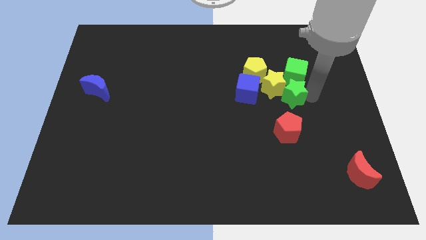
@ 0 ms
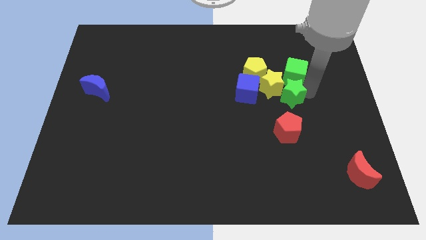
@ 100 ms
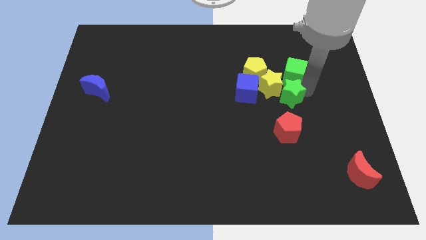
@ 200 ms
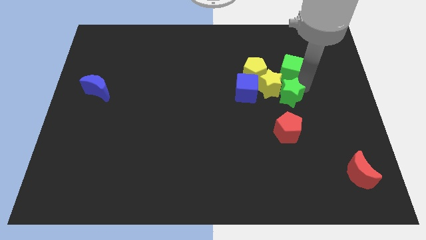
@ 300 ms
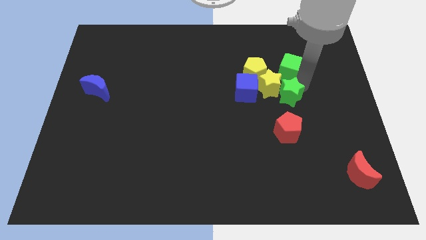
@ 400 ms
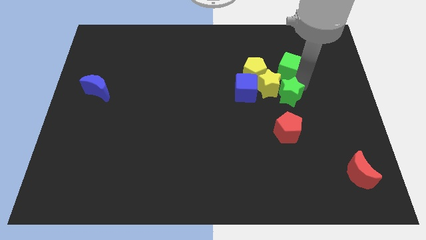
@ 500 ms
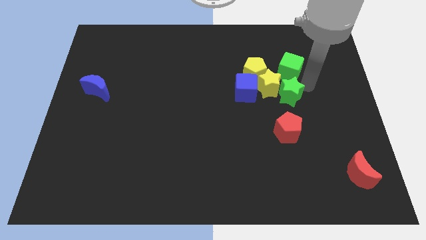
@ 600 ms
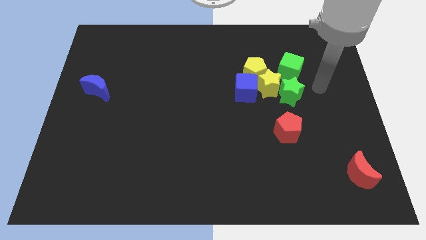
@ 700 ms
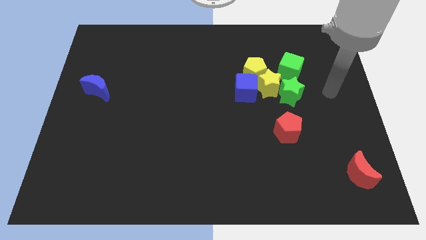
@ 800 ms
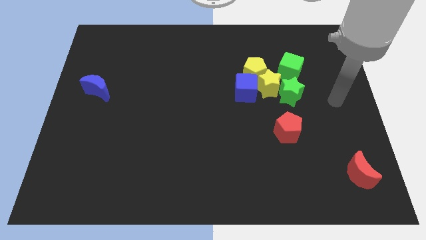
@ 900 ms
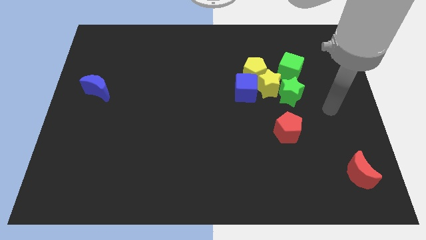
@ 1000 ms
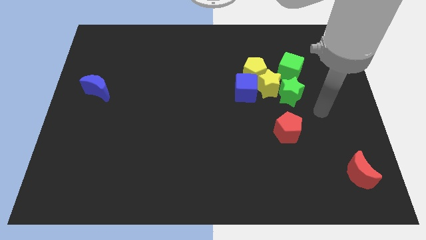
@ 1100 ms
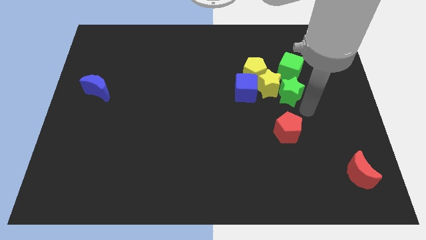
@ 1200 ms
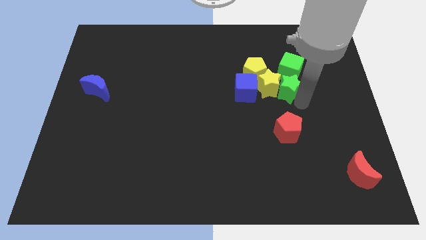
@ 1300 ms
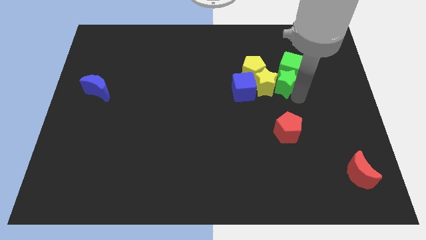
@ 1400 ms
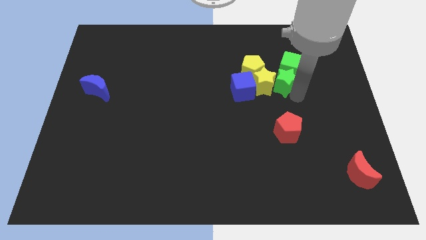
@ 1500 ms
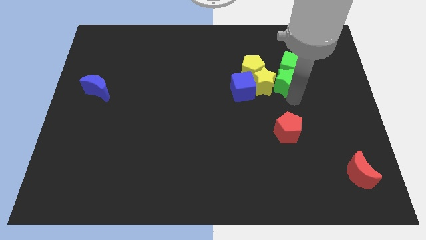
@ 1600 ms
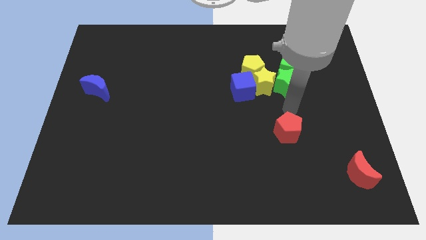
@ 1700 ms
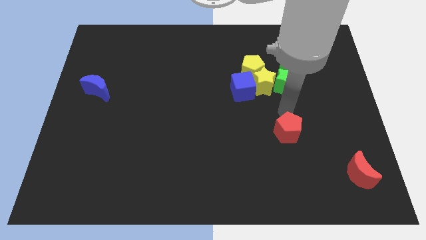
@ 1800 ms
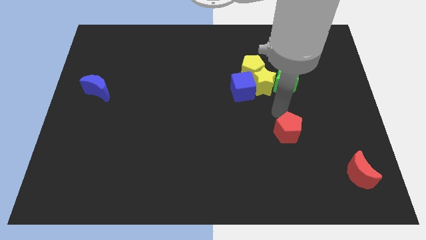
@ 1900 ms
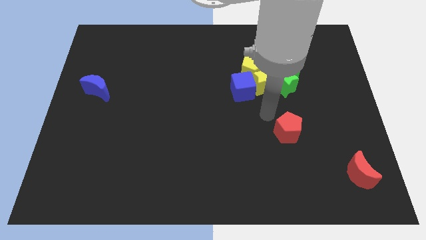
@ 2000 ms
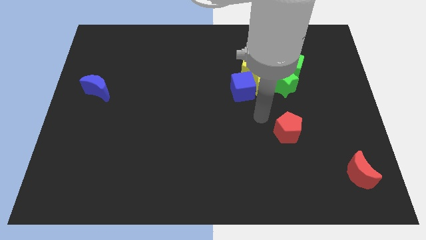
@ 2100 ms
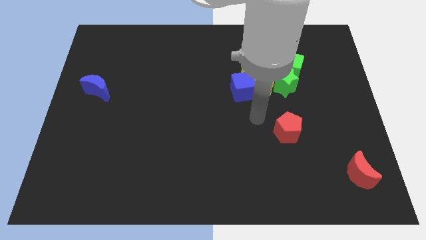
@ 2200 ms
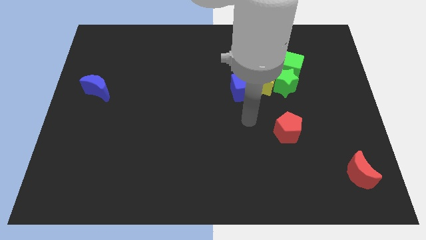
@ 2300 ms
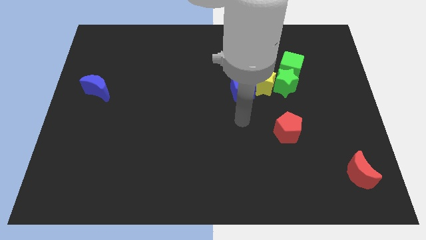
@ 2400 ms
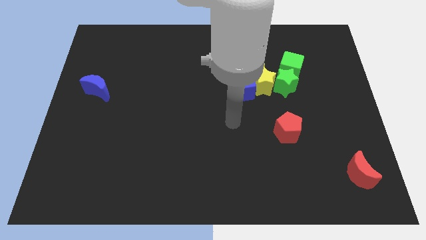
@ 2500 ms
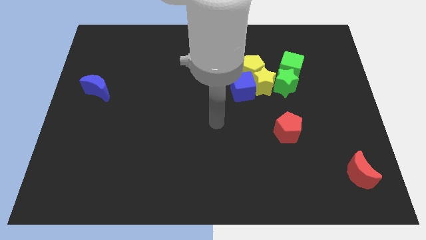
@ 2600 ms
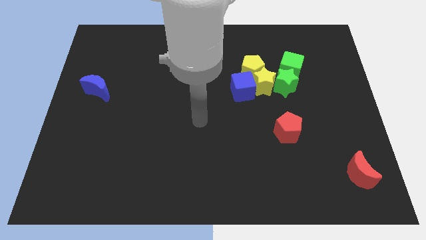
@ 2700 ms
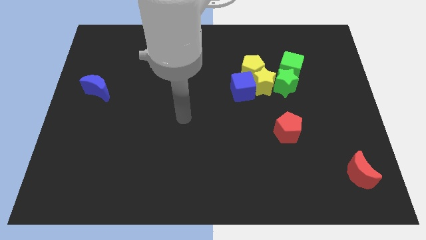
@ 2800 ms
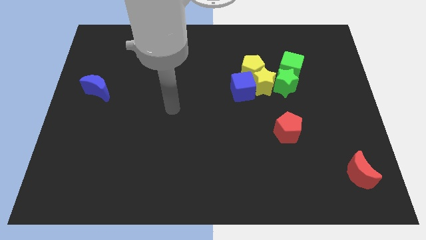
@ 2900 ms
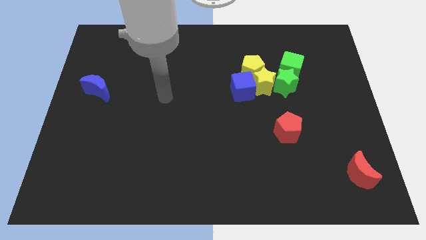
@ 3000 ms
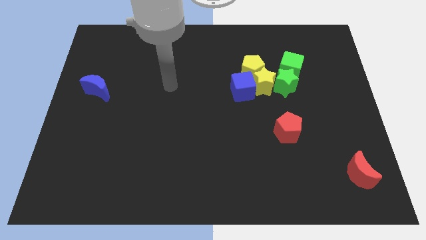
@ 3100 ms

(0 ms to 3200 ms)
push the green star into the green cube

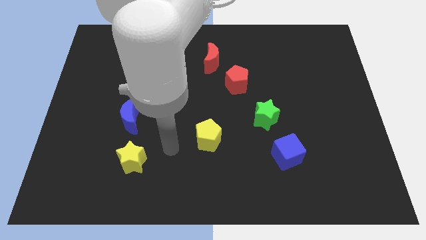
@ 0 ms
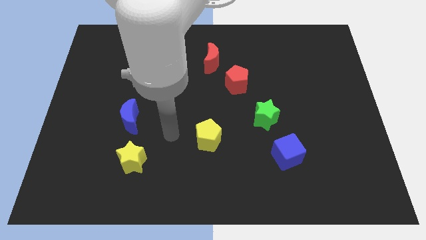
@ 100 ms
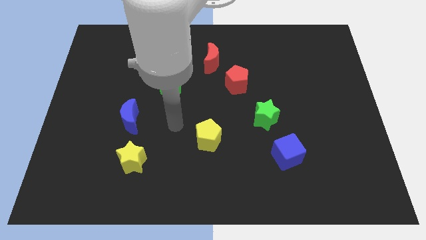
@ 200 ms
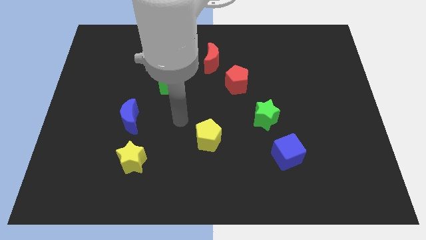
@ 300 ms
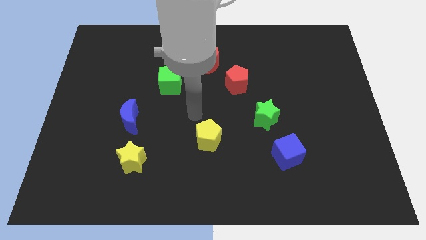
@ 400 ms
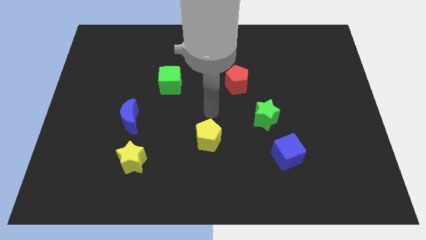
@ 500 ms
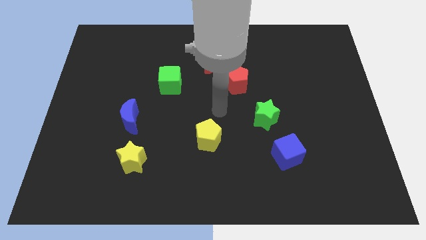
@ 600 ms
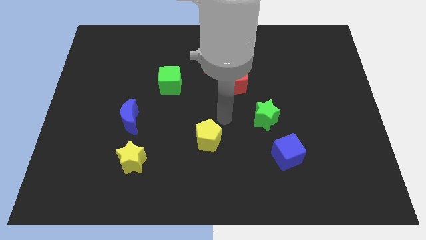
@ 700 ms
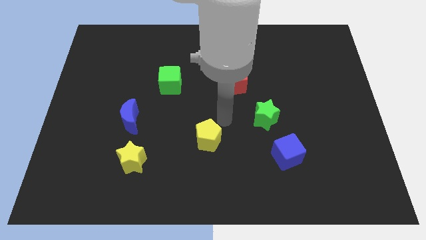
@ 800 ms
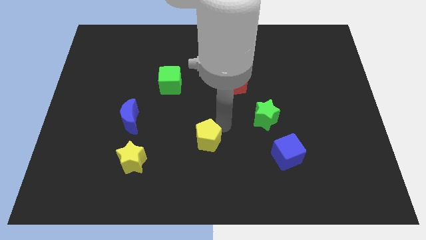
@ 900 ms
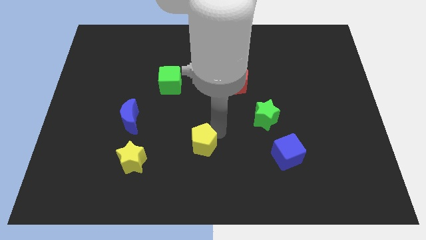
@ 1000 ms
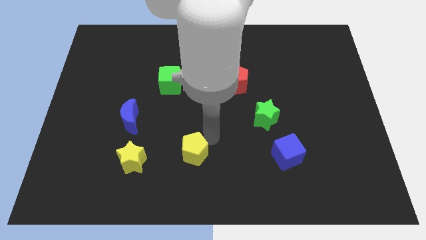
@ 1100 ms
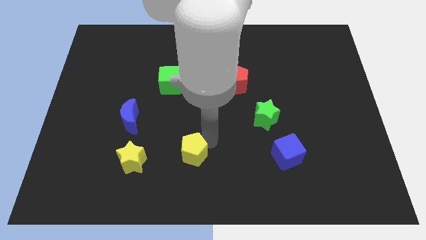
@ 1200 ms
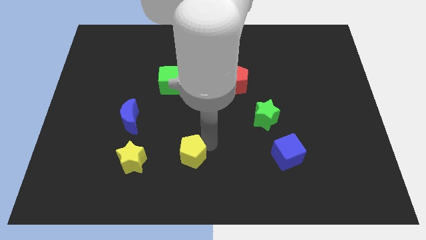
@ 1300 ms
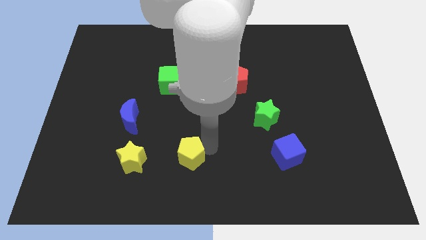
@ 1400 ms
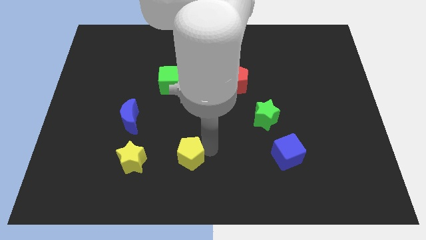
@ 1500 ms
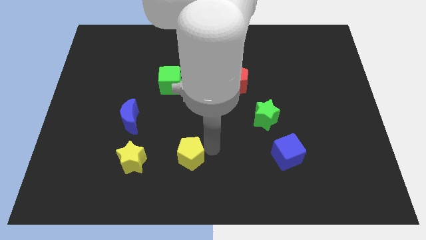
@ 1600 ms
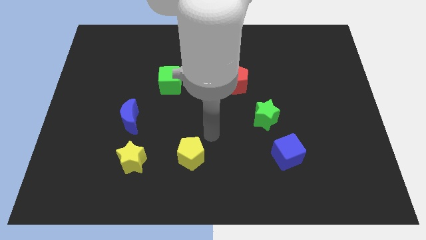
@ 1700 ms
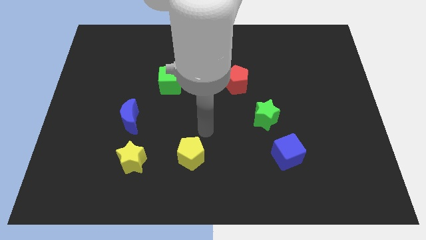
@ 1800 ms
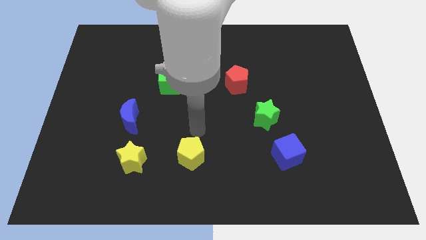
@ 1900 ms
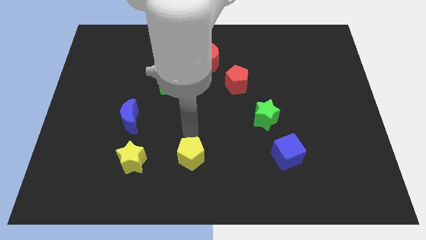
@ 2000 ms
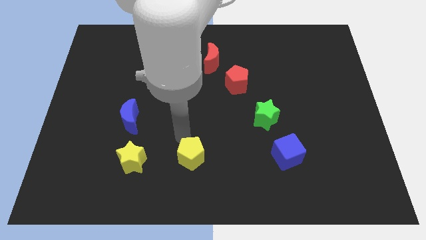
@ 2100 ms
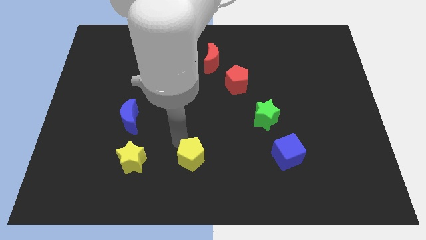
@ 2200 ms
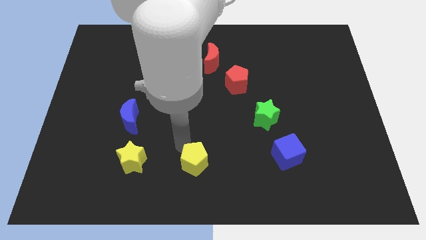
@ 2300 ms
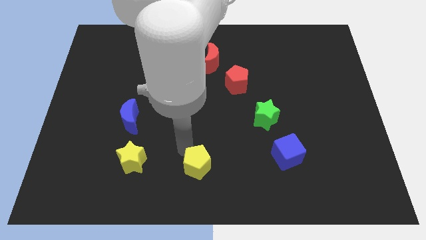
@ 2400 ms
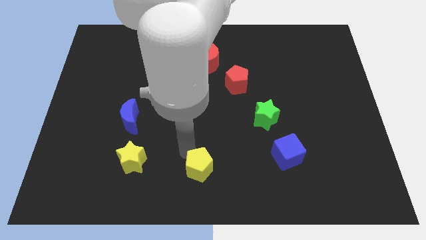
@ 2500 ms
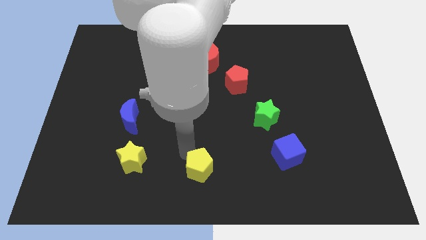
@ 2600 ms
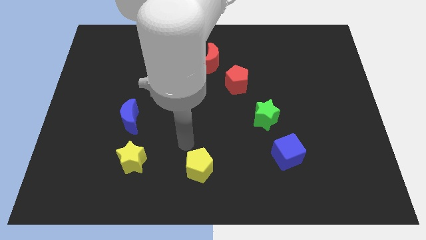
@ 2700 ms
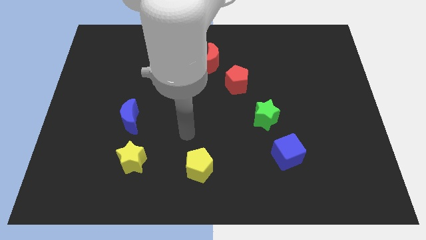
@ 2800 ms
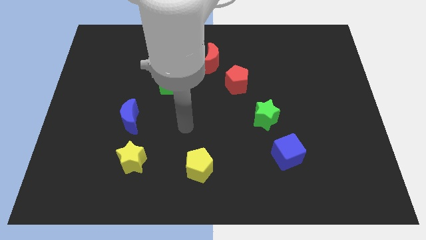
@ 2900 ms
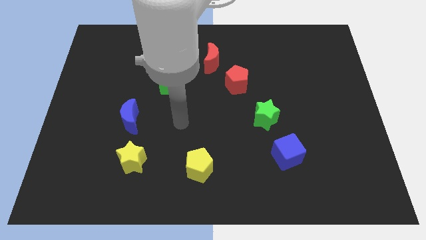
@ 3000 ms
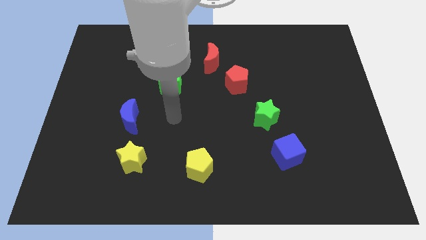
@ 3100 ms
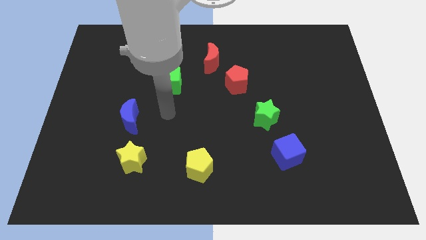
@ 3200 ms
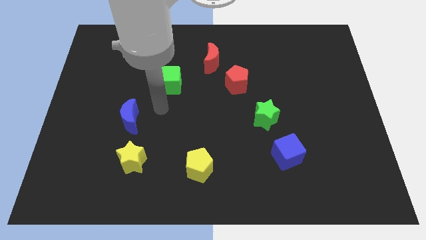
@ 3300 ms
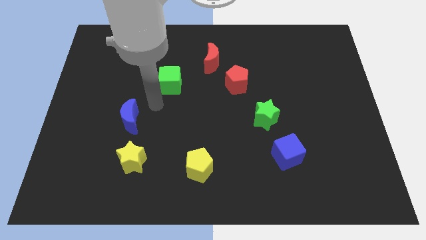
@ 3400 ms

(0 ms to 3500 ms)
place the yellow pentagon parallel to the yellow star

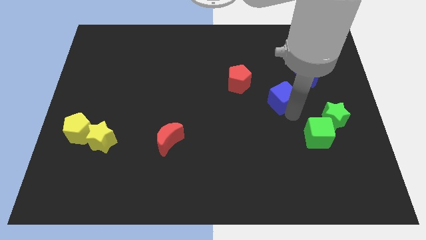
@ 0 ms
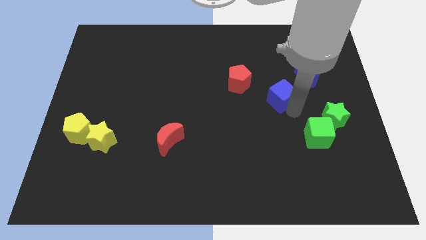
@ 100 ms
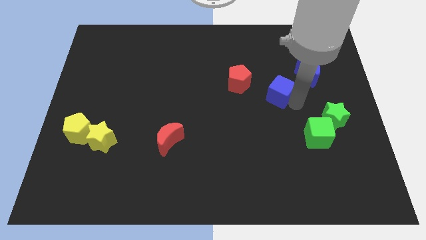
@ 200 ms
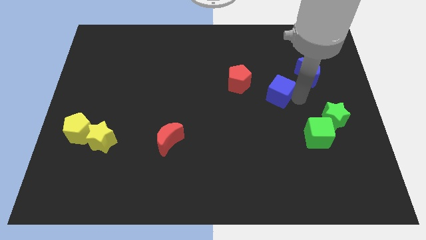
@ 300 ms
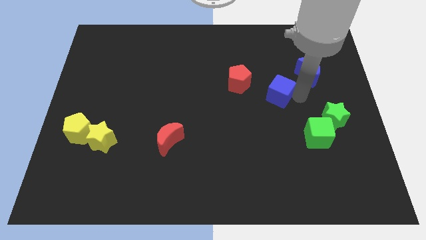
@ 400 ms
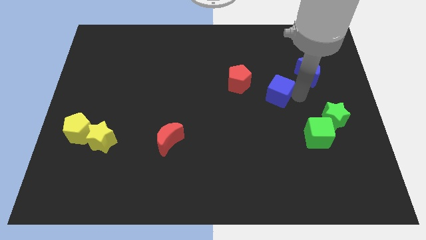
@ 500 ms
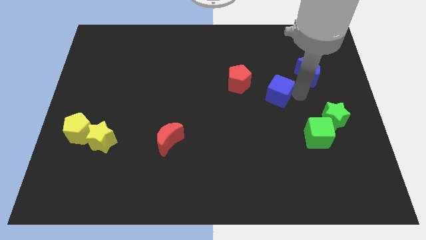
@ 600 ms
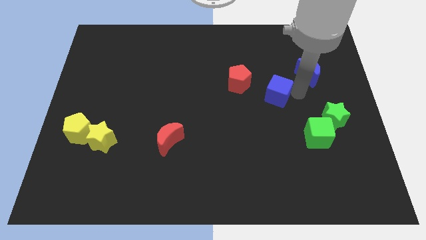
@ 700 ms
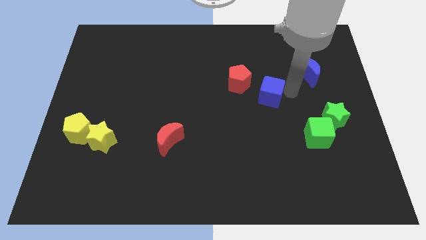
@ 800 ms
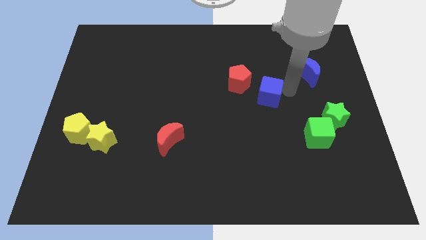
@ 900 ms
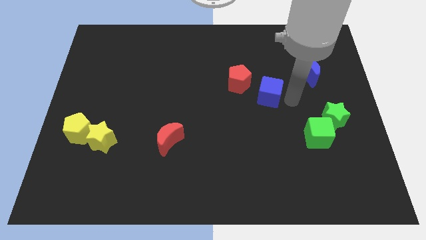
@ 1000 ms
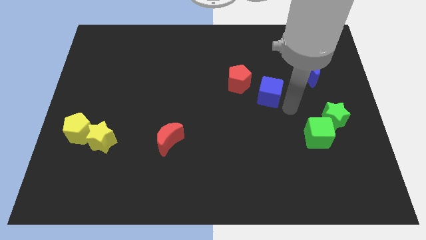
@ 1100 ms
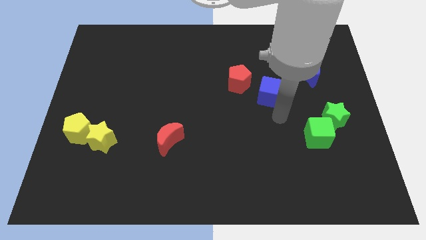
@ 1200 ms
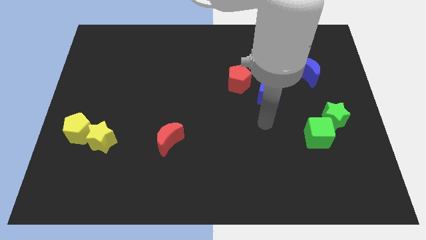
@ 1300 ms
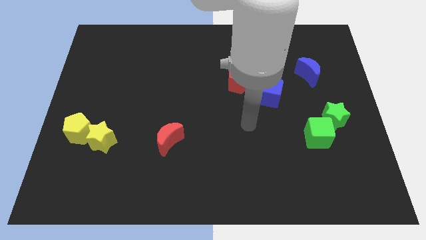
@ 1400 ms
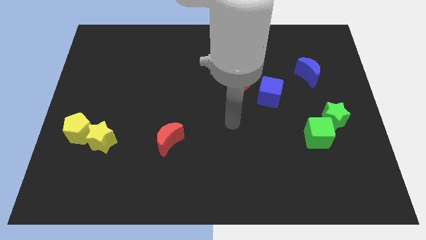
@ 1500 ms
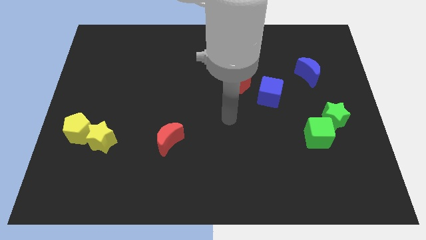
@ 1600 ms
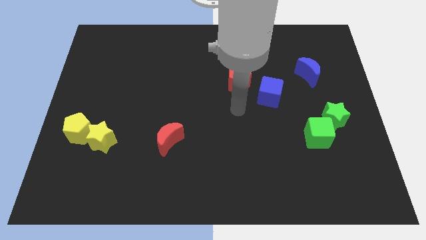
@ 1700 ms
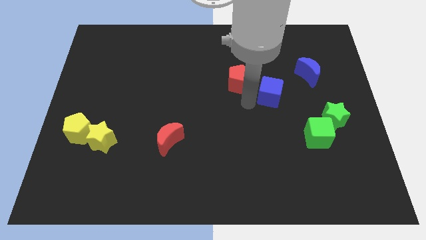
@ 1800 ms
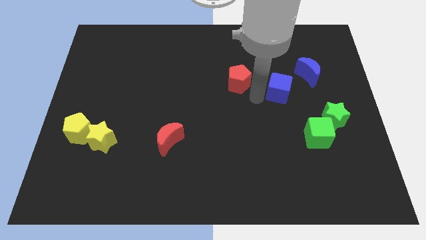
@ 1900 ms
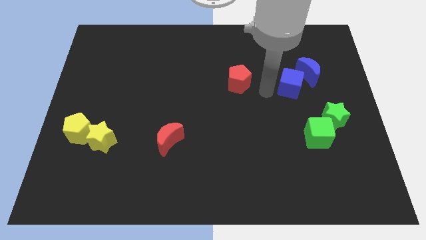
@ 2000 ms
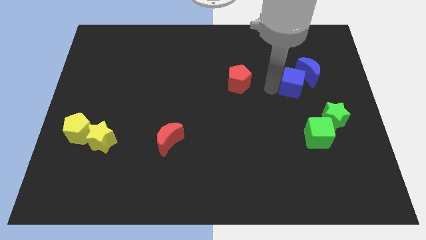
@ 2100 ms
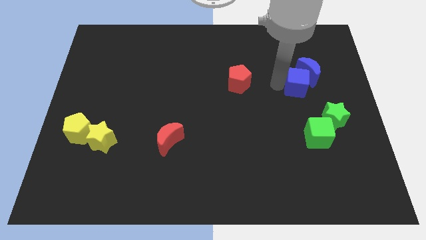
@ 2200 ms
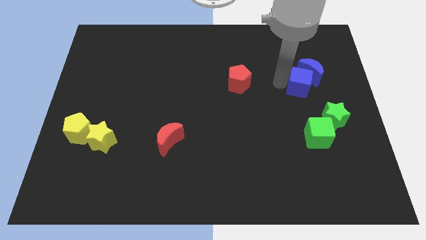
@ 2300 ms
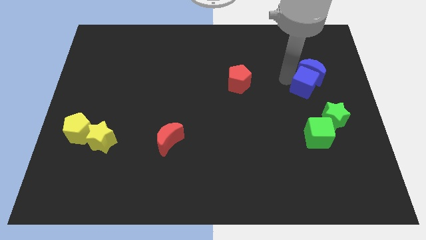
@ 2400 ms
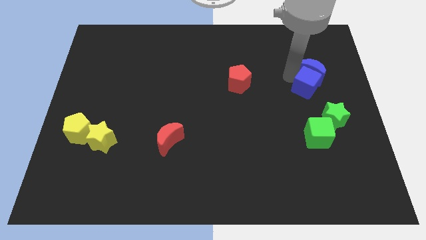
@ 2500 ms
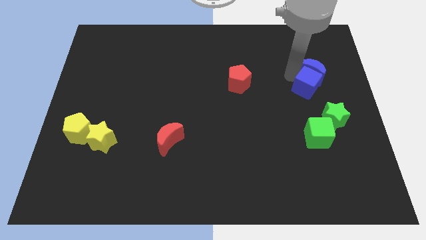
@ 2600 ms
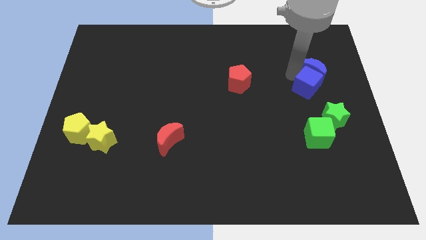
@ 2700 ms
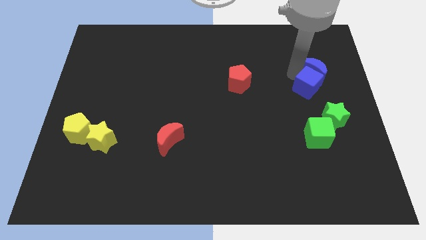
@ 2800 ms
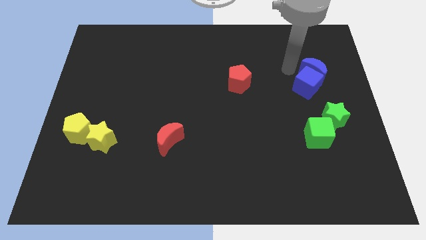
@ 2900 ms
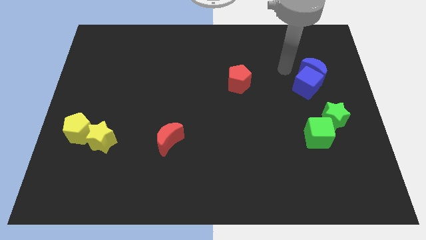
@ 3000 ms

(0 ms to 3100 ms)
move the blue cube to the bottom of the blue moon
